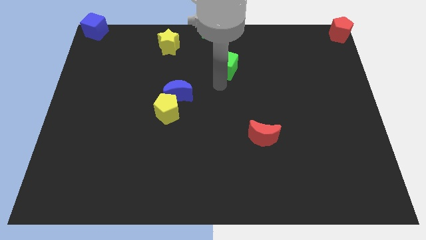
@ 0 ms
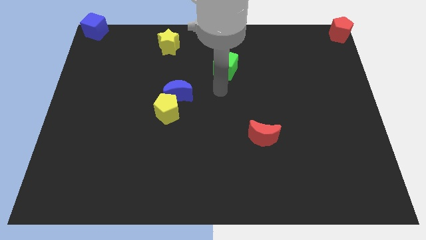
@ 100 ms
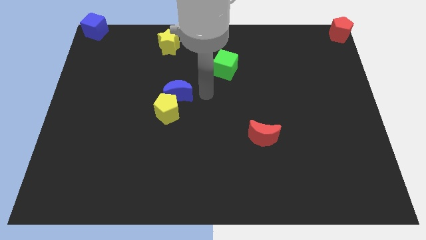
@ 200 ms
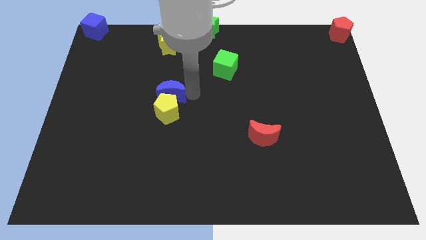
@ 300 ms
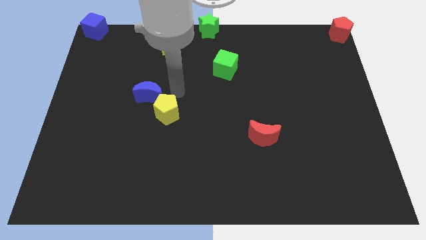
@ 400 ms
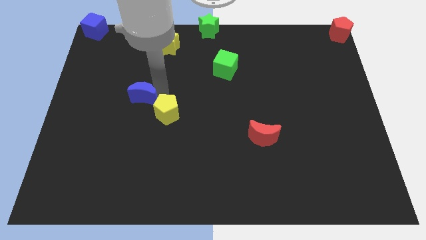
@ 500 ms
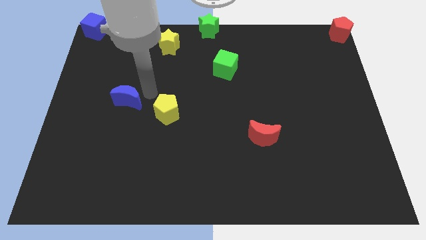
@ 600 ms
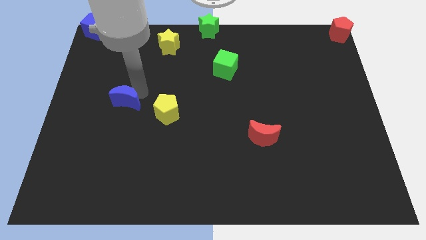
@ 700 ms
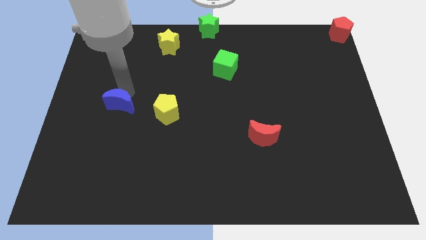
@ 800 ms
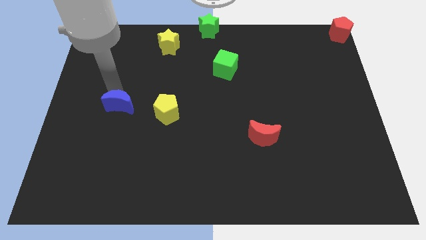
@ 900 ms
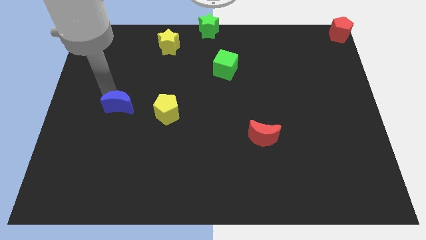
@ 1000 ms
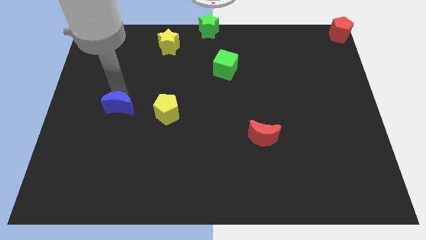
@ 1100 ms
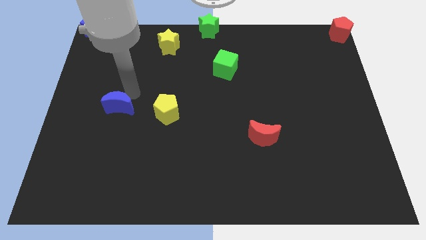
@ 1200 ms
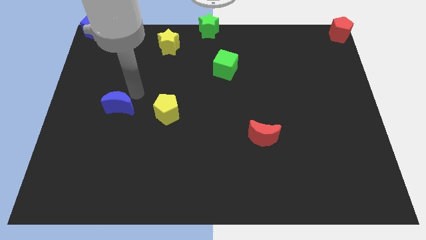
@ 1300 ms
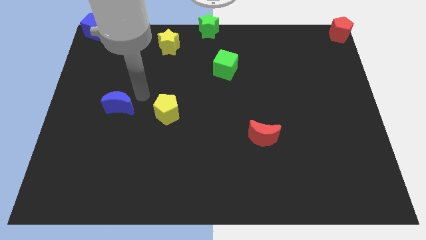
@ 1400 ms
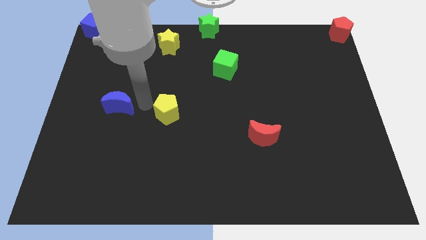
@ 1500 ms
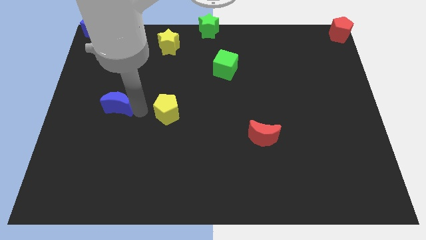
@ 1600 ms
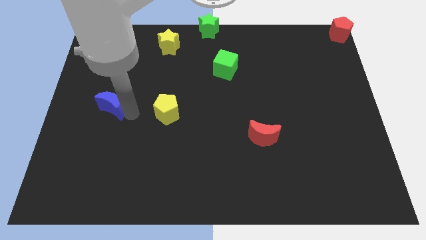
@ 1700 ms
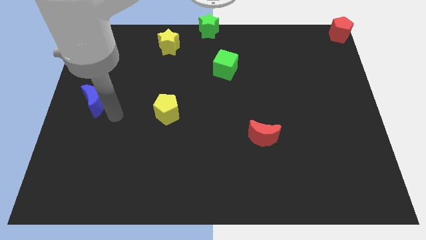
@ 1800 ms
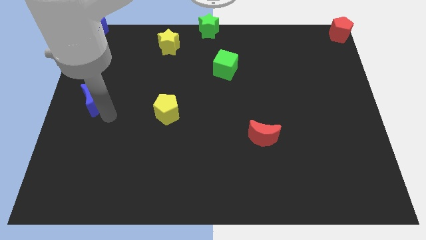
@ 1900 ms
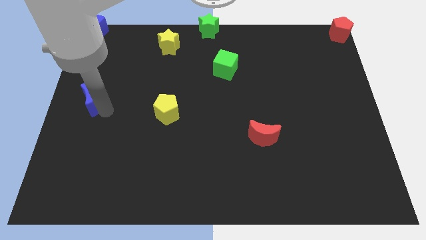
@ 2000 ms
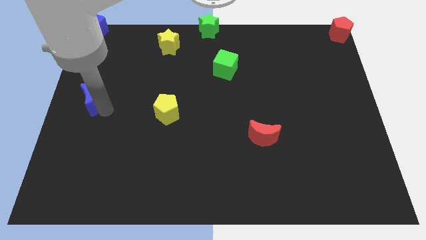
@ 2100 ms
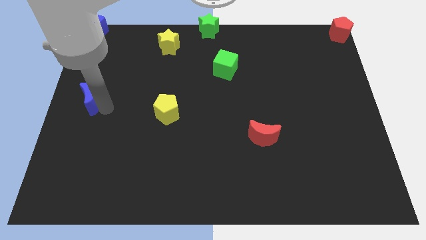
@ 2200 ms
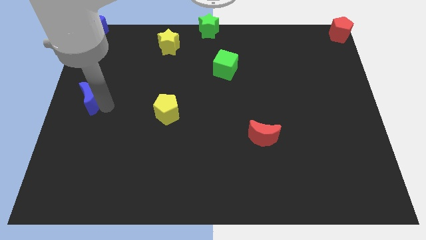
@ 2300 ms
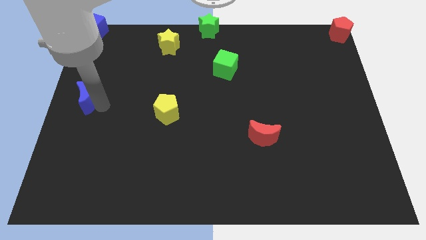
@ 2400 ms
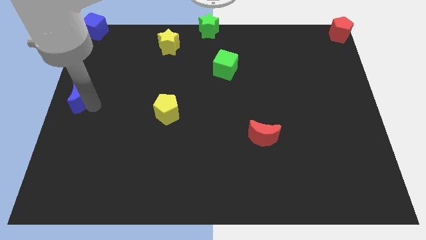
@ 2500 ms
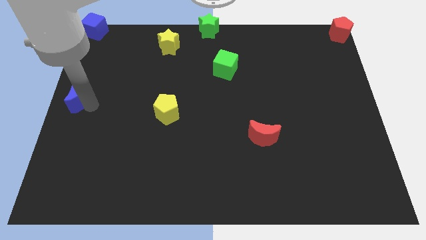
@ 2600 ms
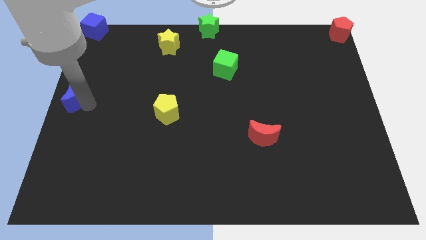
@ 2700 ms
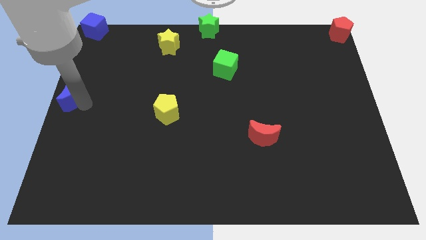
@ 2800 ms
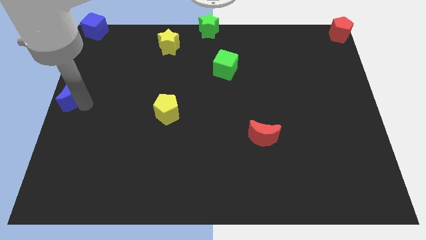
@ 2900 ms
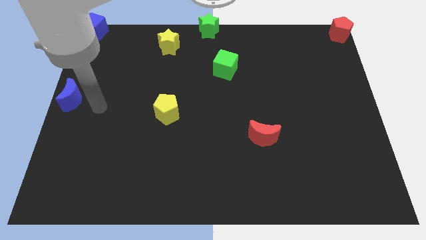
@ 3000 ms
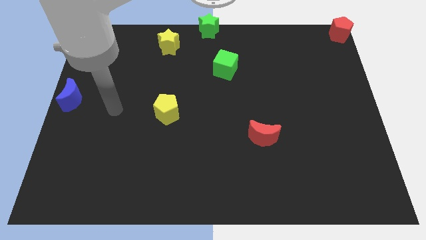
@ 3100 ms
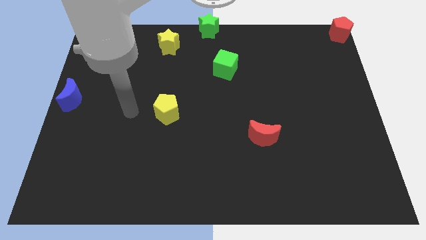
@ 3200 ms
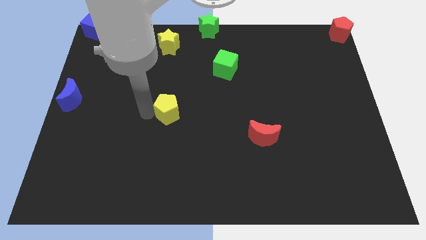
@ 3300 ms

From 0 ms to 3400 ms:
push the blue moon towards the center left of the board

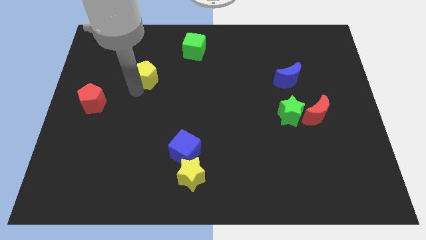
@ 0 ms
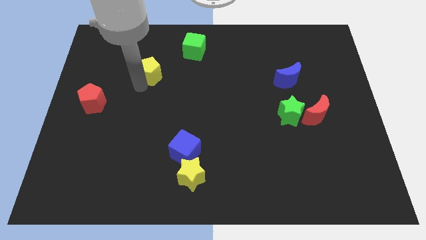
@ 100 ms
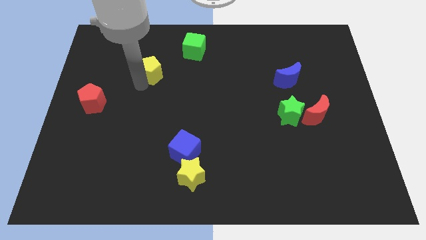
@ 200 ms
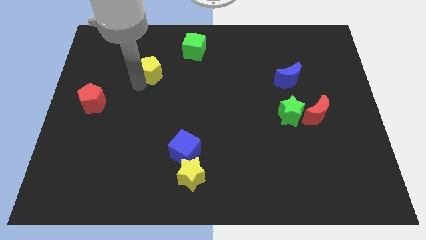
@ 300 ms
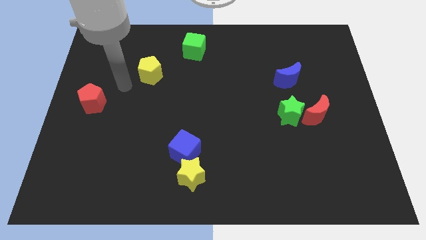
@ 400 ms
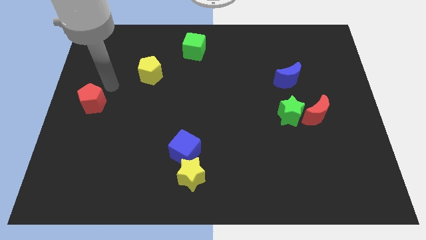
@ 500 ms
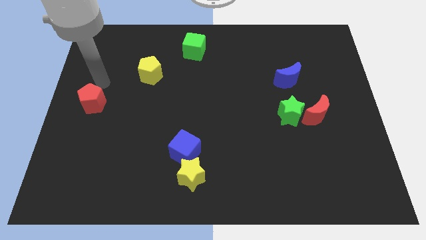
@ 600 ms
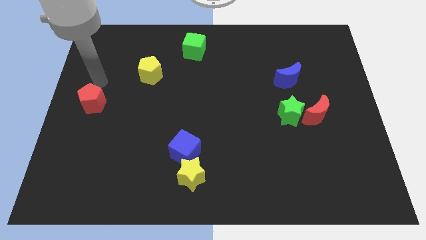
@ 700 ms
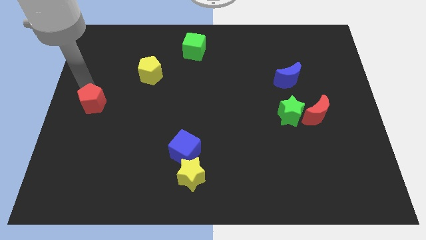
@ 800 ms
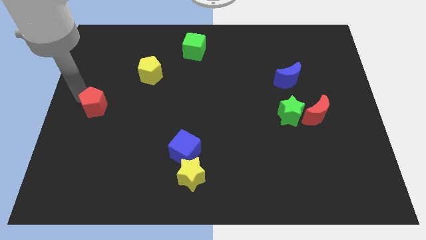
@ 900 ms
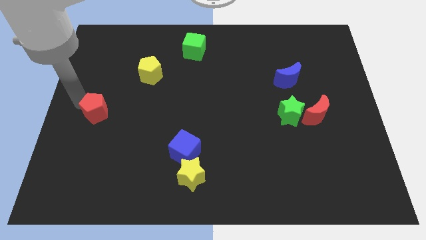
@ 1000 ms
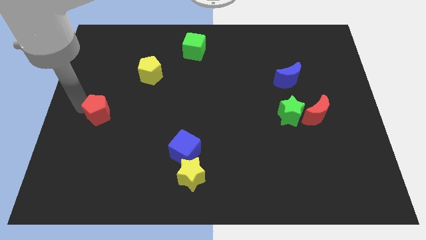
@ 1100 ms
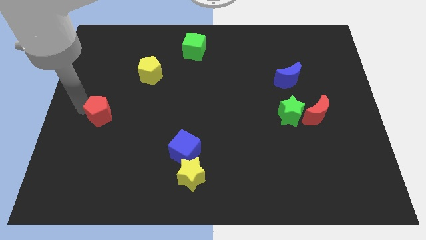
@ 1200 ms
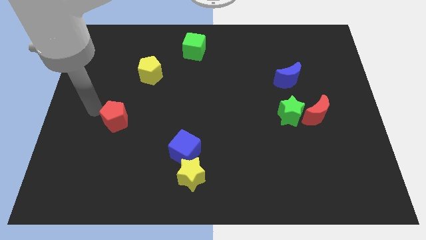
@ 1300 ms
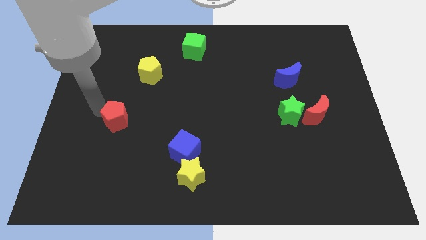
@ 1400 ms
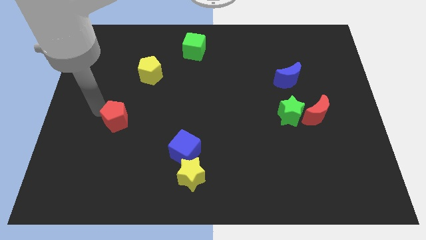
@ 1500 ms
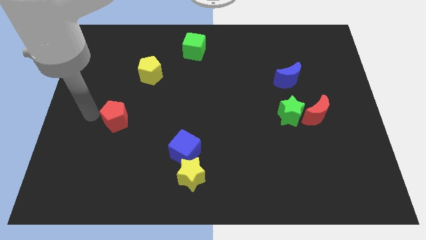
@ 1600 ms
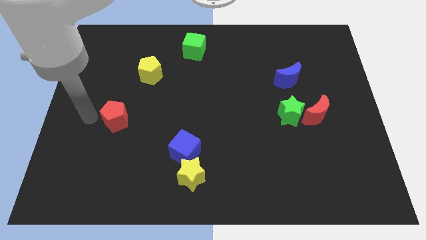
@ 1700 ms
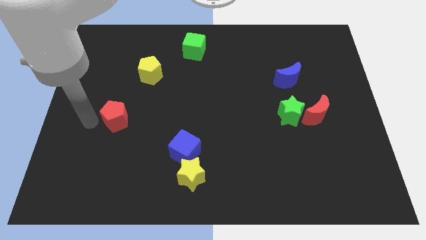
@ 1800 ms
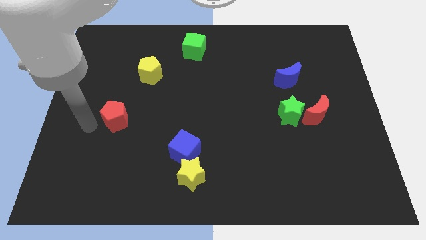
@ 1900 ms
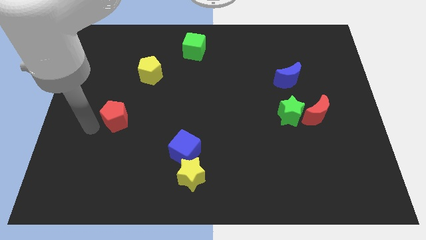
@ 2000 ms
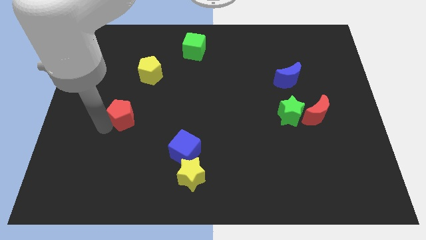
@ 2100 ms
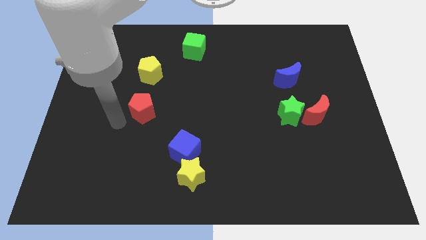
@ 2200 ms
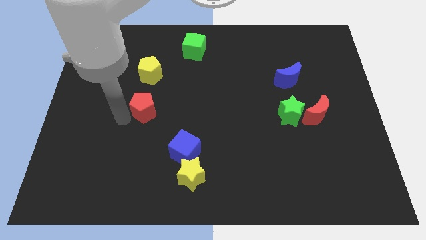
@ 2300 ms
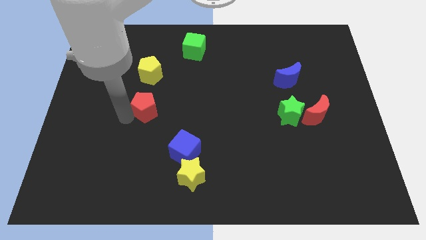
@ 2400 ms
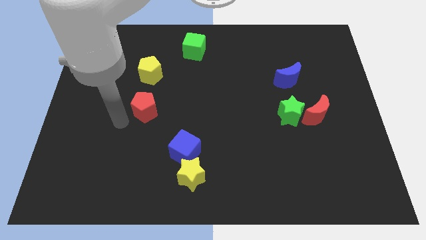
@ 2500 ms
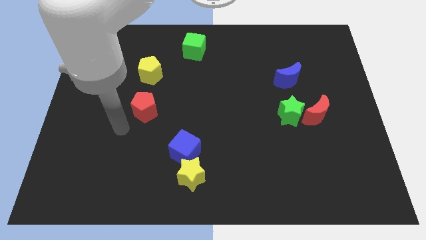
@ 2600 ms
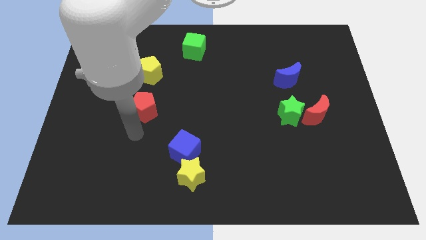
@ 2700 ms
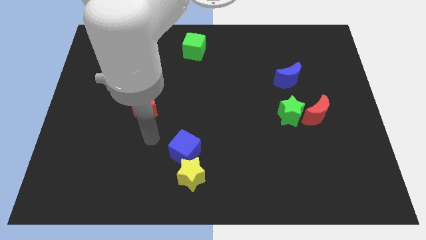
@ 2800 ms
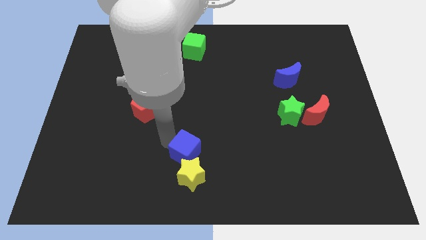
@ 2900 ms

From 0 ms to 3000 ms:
move the red pentagon below the yellow pentagon

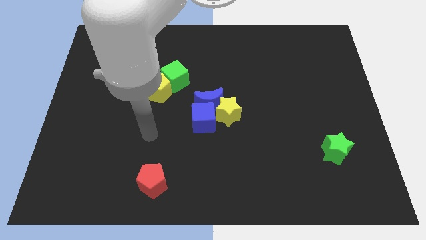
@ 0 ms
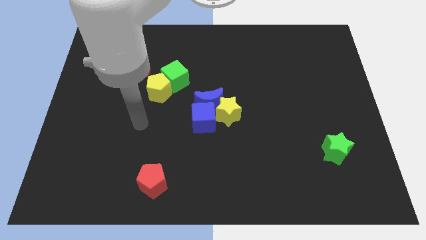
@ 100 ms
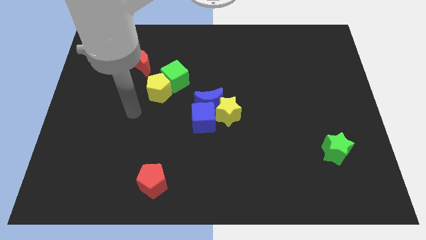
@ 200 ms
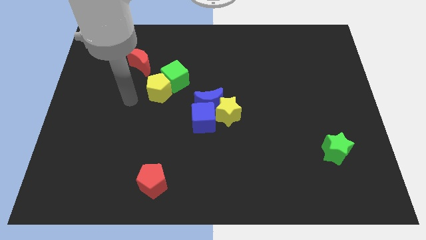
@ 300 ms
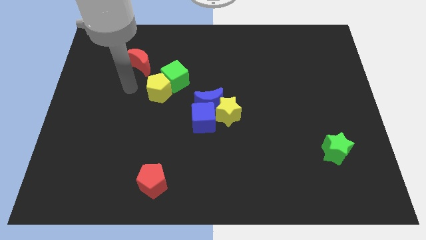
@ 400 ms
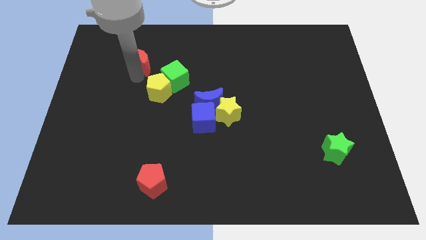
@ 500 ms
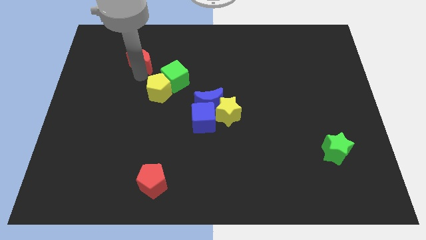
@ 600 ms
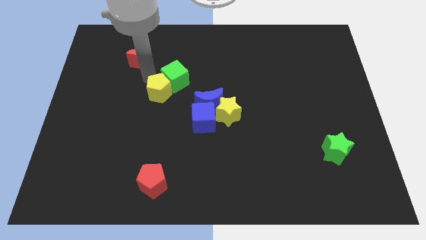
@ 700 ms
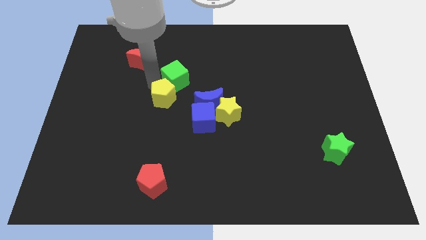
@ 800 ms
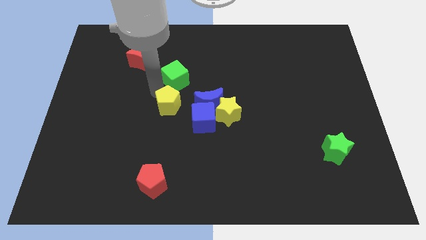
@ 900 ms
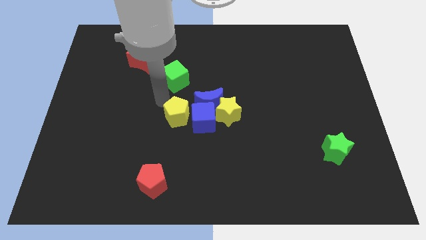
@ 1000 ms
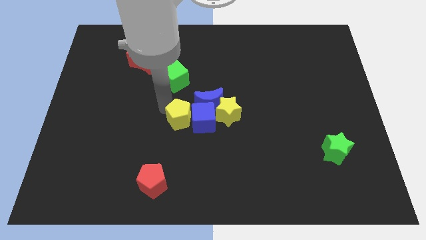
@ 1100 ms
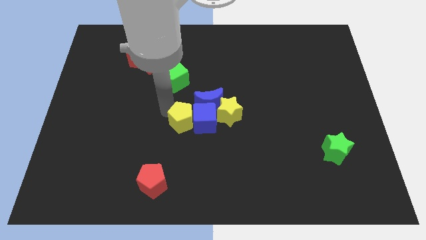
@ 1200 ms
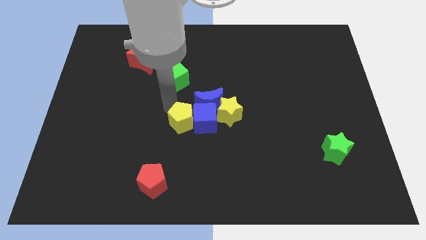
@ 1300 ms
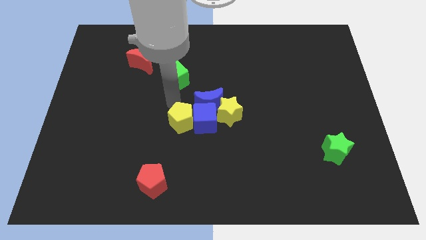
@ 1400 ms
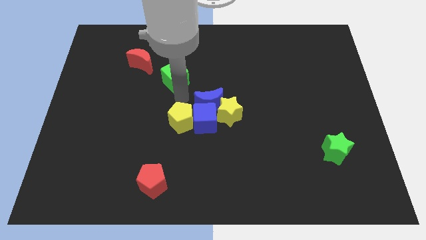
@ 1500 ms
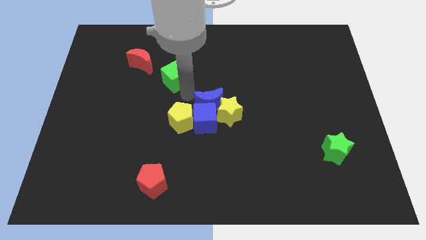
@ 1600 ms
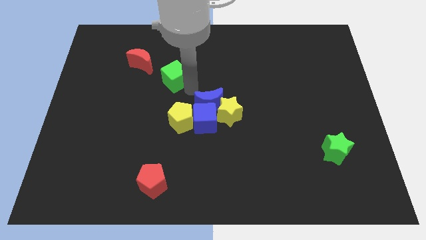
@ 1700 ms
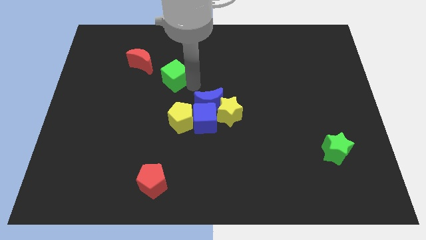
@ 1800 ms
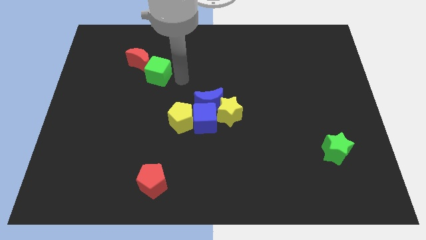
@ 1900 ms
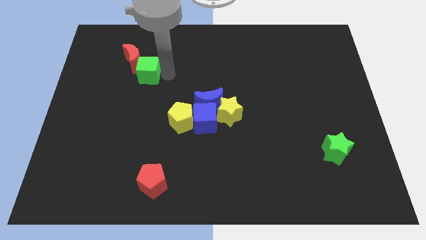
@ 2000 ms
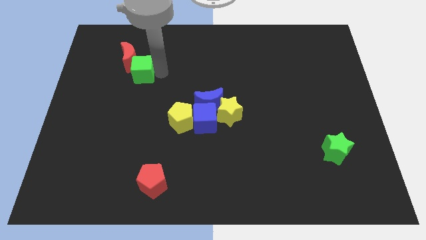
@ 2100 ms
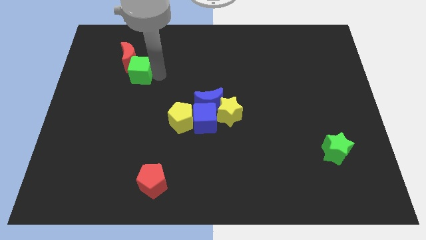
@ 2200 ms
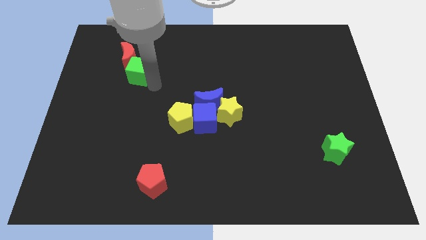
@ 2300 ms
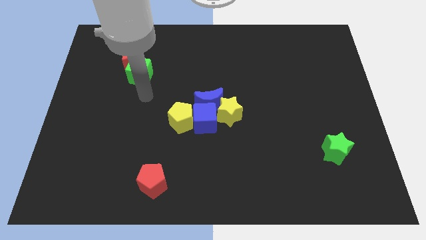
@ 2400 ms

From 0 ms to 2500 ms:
push green cube slightly towards left side
